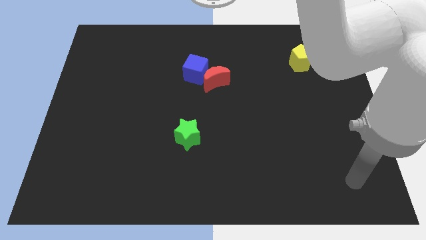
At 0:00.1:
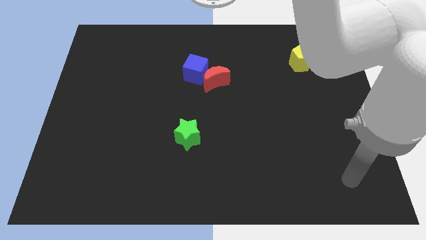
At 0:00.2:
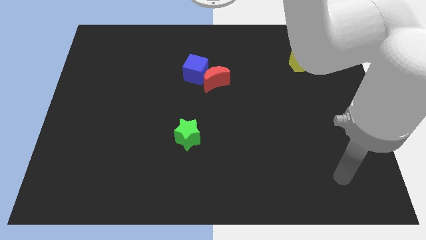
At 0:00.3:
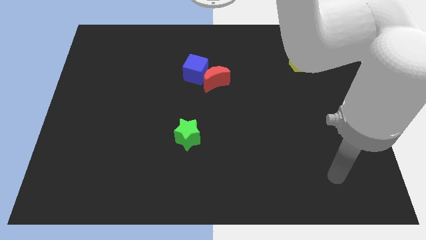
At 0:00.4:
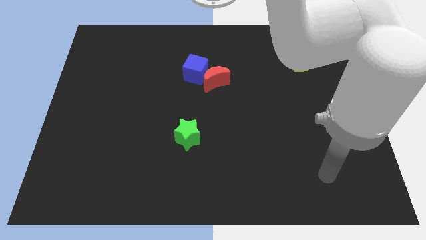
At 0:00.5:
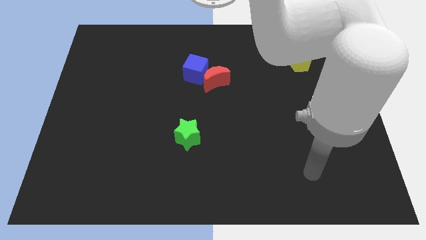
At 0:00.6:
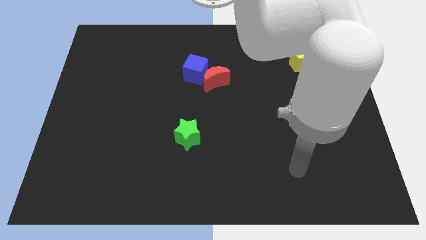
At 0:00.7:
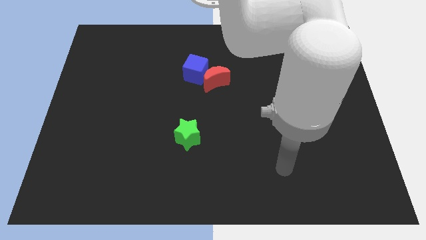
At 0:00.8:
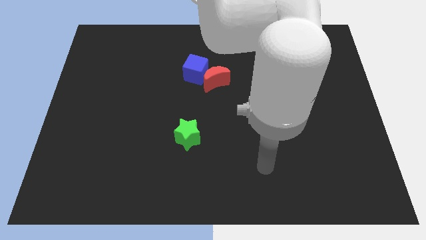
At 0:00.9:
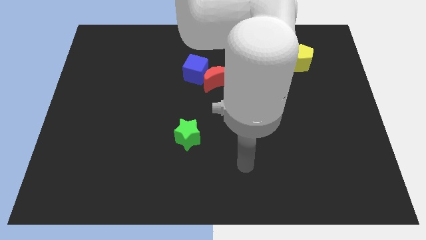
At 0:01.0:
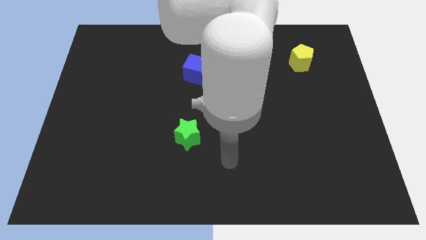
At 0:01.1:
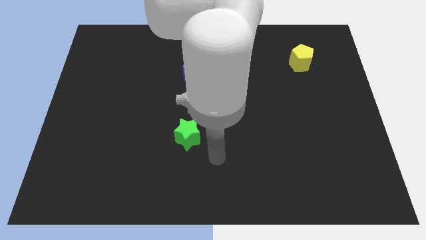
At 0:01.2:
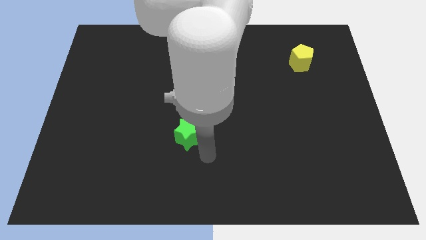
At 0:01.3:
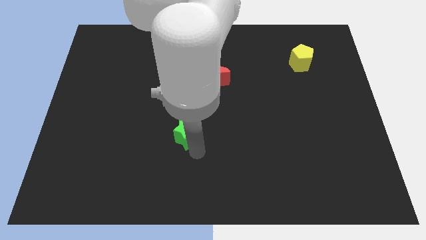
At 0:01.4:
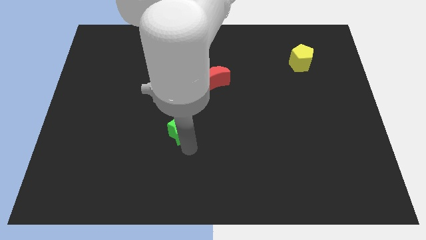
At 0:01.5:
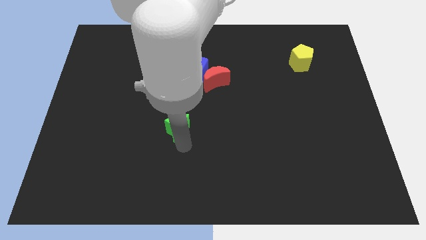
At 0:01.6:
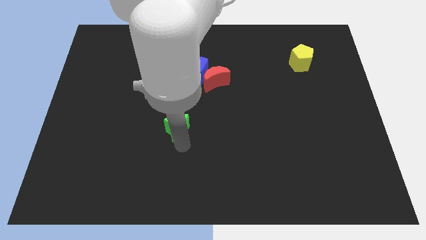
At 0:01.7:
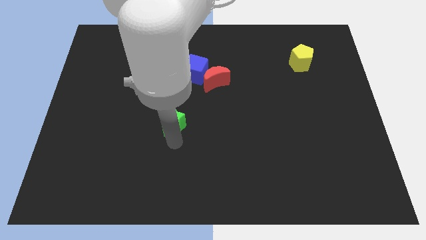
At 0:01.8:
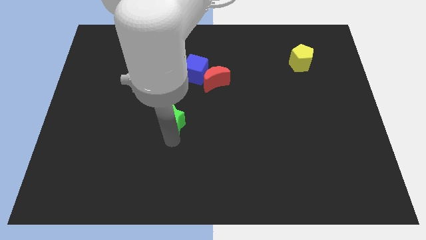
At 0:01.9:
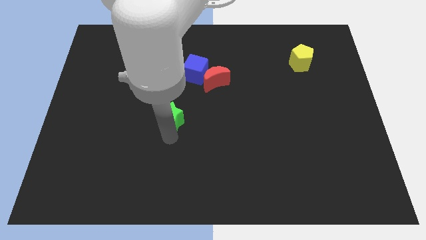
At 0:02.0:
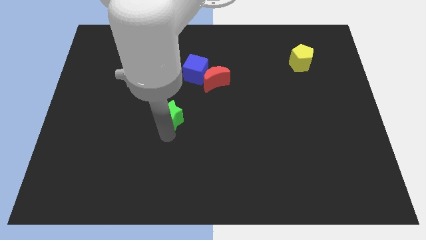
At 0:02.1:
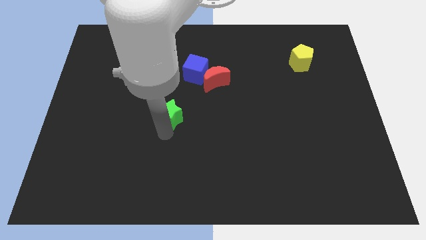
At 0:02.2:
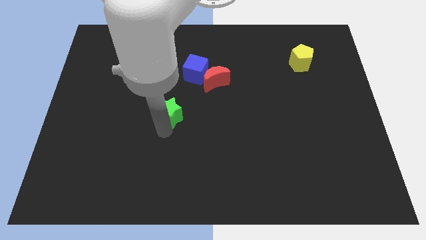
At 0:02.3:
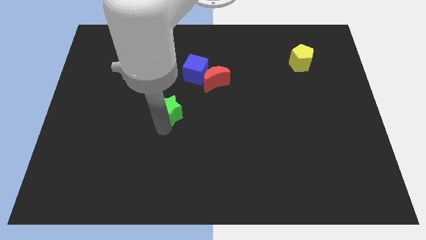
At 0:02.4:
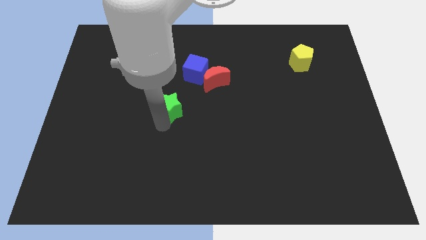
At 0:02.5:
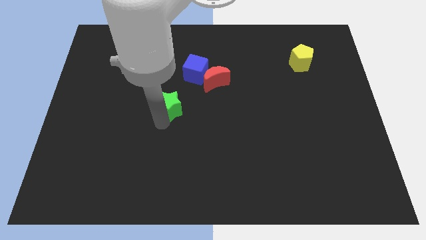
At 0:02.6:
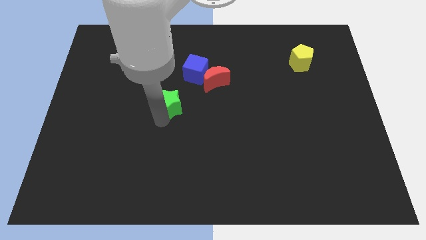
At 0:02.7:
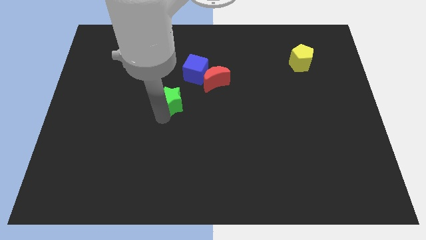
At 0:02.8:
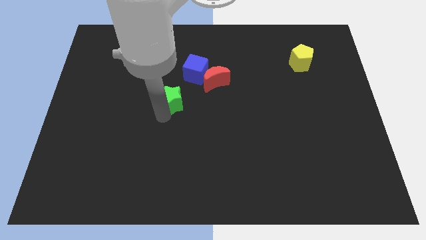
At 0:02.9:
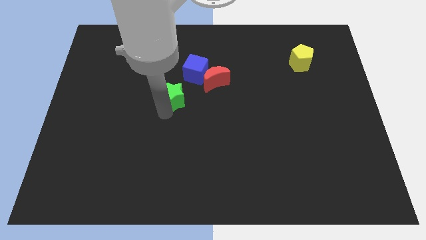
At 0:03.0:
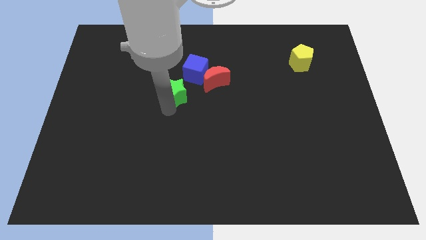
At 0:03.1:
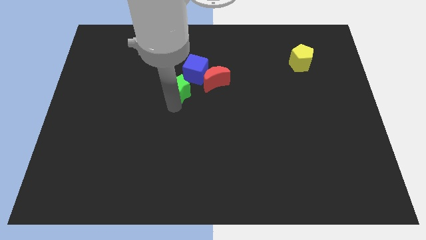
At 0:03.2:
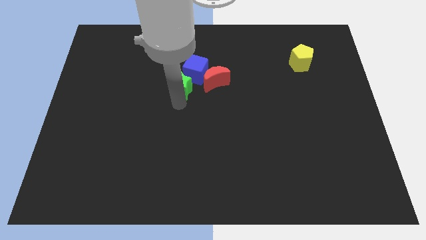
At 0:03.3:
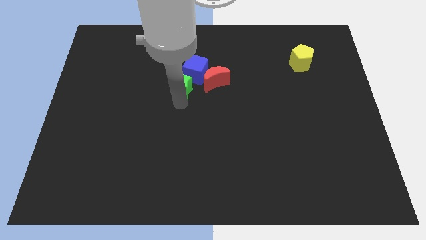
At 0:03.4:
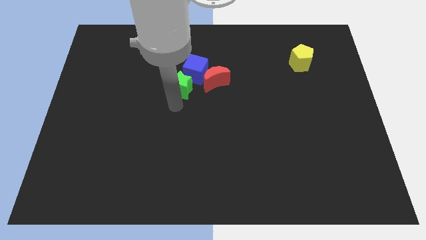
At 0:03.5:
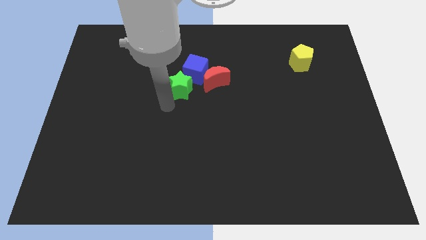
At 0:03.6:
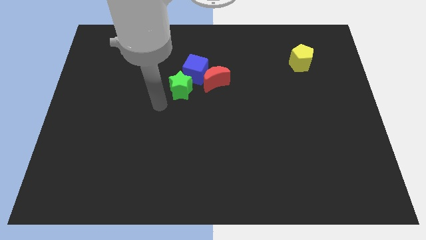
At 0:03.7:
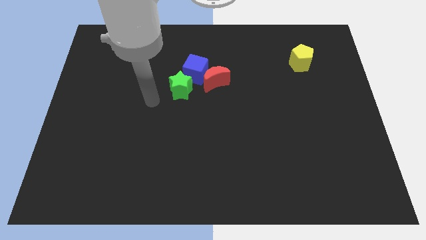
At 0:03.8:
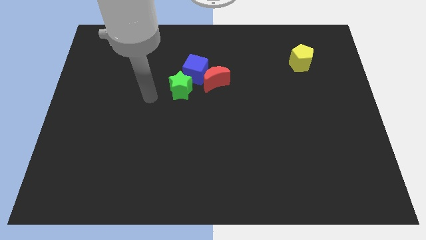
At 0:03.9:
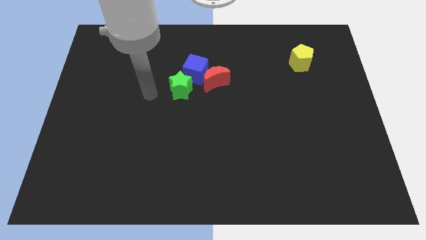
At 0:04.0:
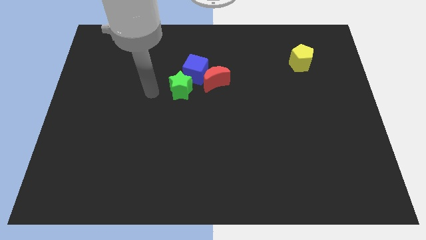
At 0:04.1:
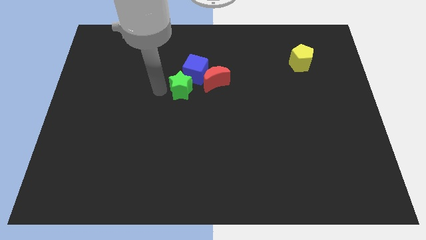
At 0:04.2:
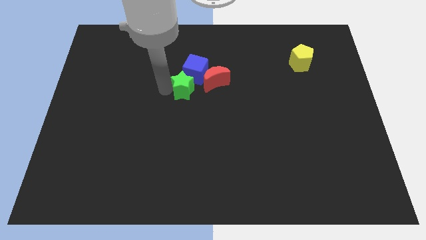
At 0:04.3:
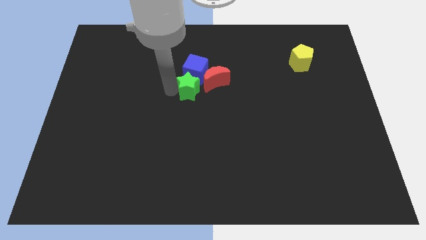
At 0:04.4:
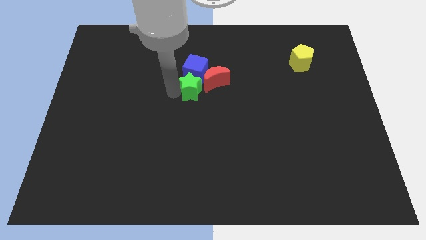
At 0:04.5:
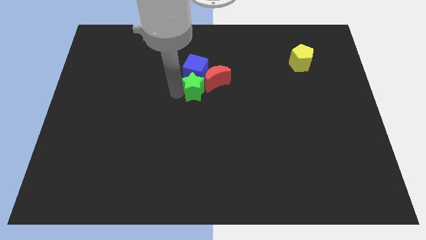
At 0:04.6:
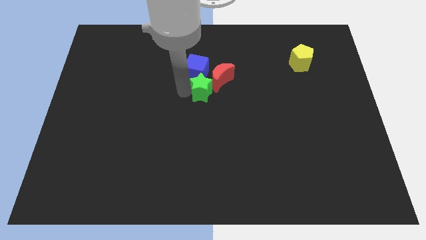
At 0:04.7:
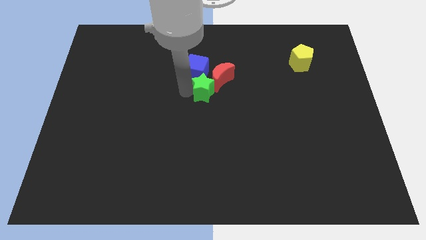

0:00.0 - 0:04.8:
put the star to the red block

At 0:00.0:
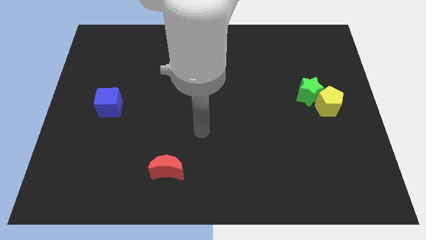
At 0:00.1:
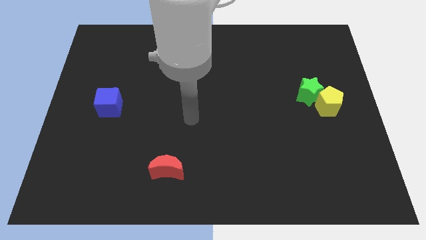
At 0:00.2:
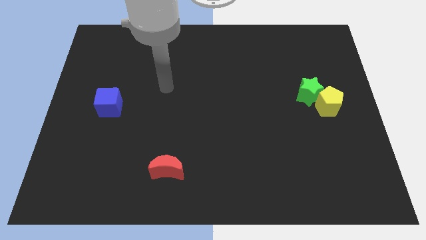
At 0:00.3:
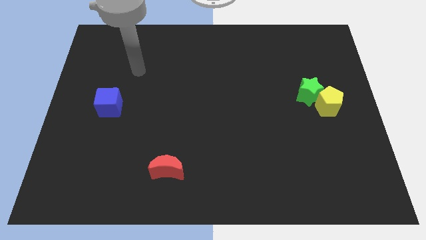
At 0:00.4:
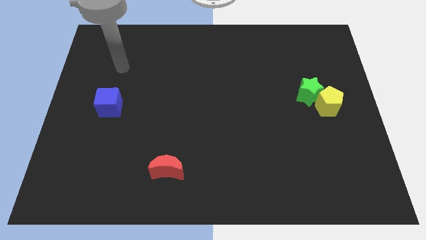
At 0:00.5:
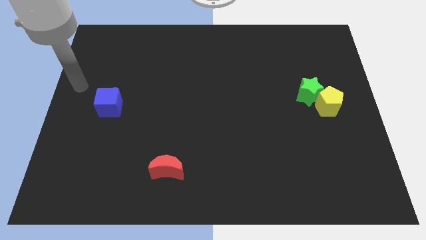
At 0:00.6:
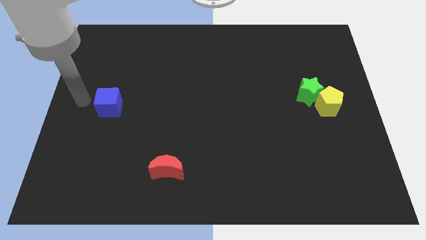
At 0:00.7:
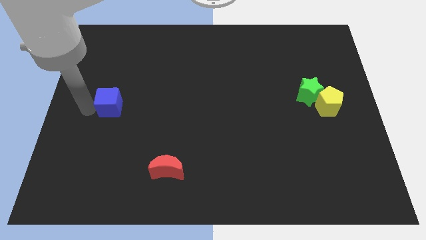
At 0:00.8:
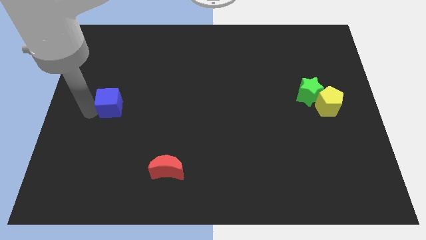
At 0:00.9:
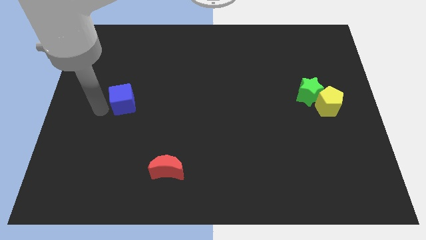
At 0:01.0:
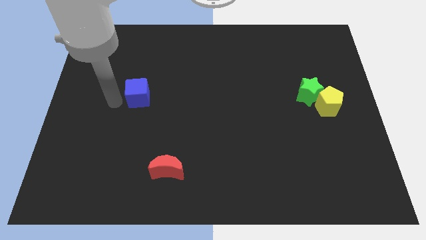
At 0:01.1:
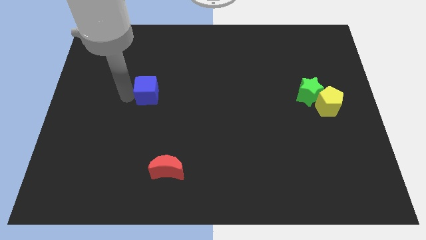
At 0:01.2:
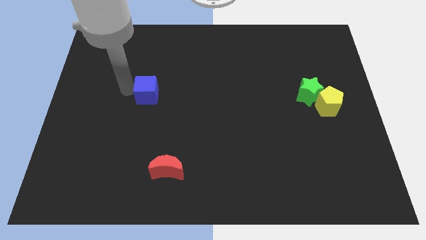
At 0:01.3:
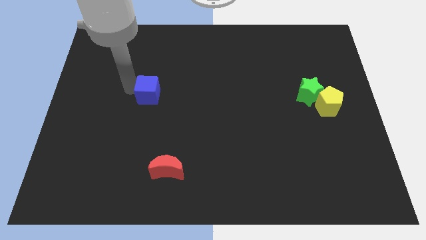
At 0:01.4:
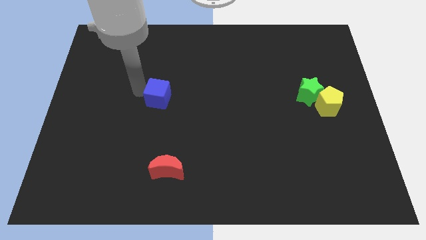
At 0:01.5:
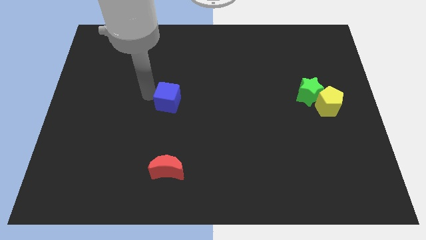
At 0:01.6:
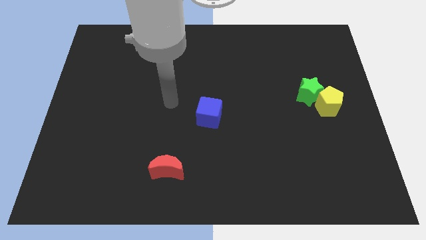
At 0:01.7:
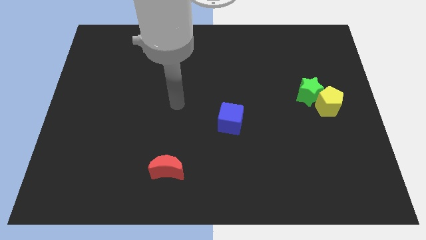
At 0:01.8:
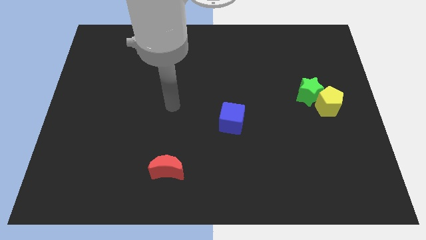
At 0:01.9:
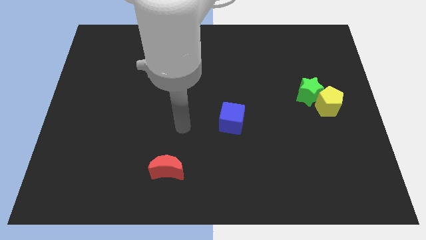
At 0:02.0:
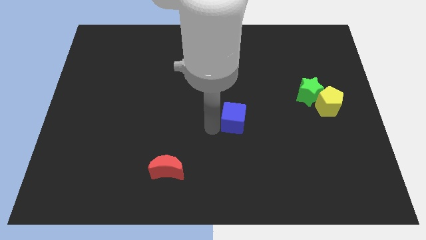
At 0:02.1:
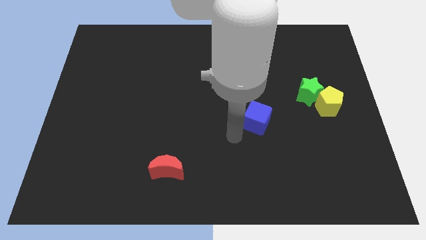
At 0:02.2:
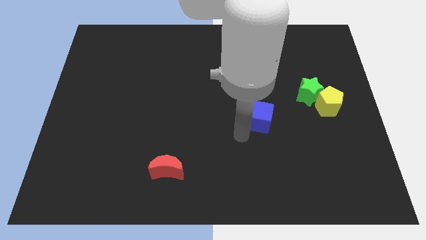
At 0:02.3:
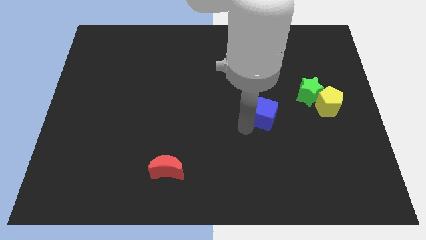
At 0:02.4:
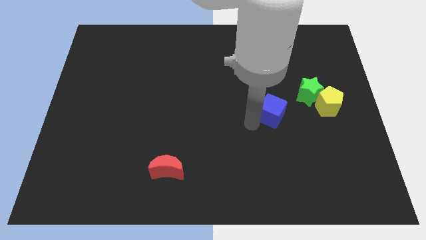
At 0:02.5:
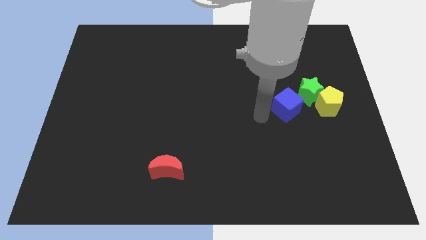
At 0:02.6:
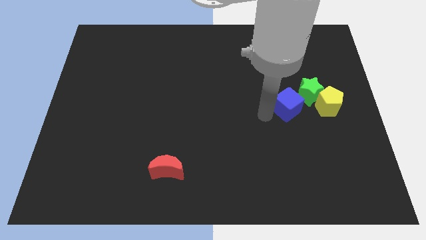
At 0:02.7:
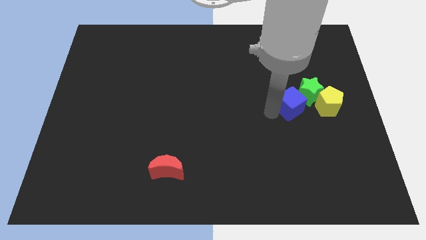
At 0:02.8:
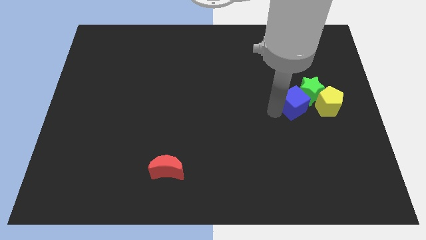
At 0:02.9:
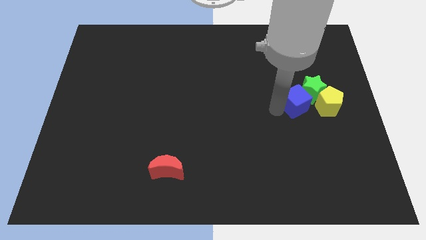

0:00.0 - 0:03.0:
put the blue cube towards the green star

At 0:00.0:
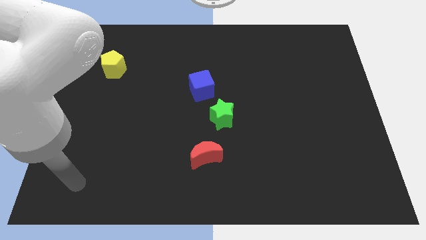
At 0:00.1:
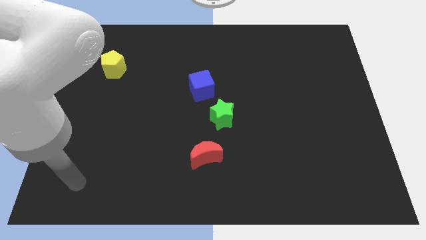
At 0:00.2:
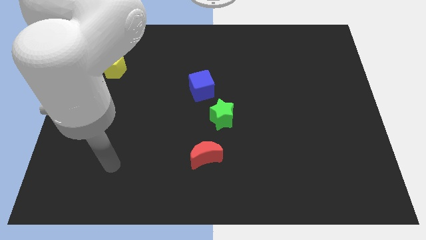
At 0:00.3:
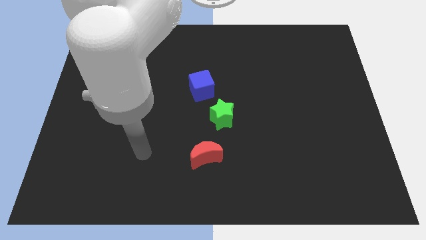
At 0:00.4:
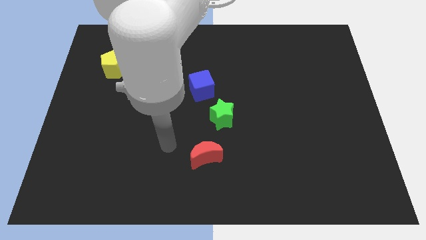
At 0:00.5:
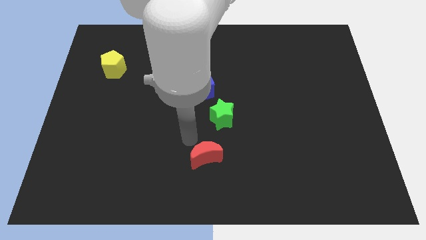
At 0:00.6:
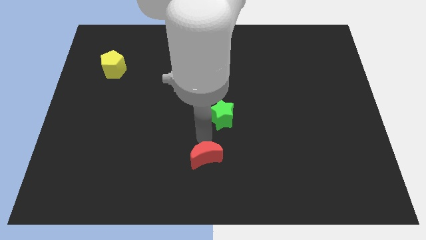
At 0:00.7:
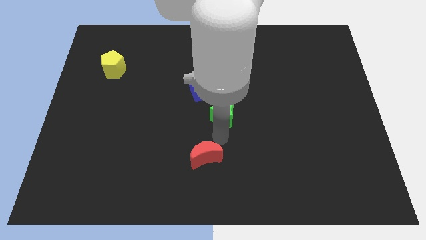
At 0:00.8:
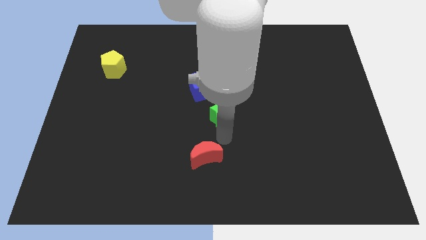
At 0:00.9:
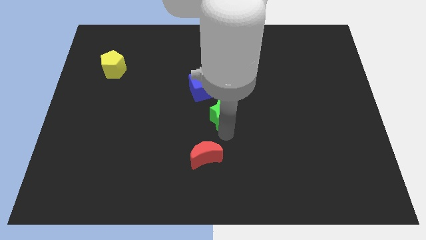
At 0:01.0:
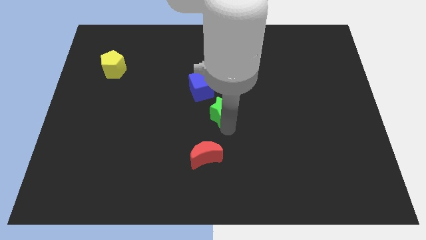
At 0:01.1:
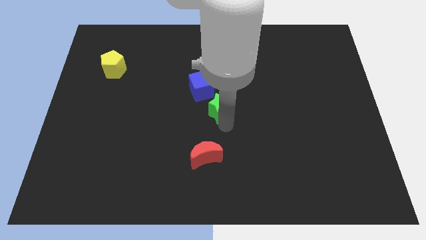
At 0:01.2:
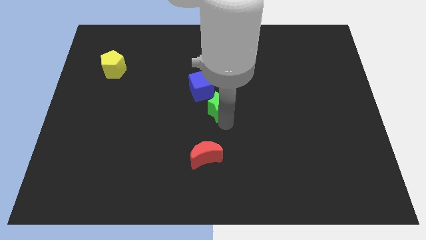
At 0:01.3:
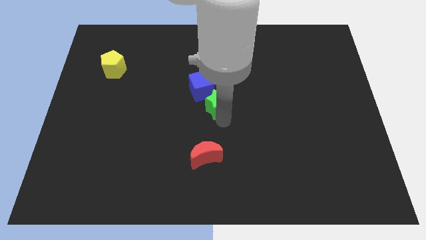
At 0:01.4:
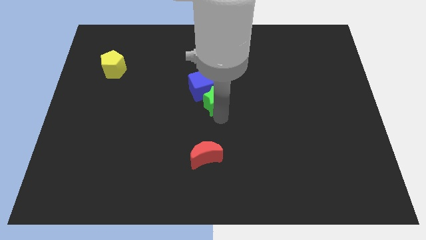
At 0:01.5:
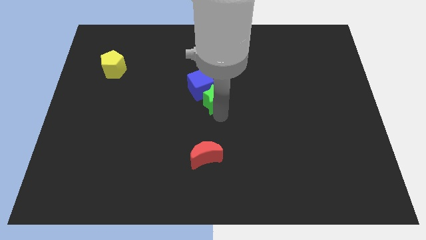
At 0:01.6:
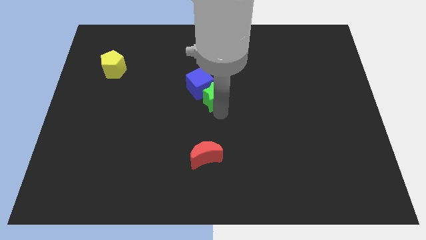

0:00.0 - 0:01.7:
move the star to the blue block
